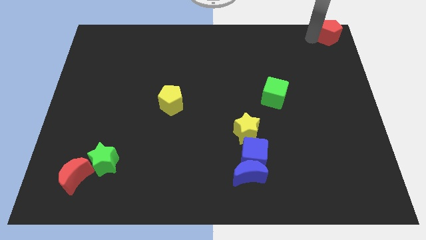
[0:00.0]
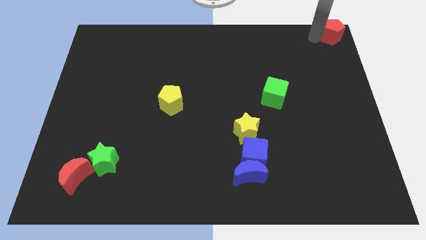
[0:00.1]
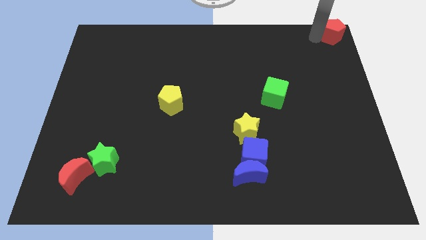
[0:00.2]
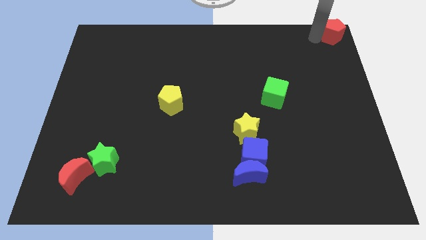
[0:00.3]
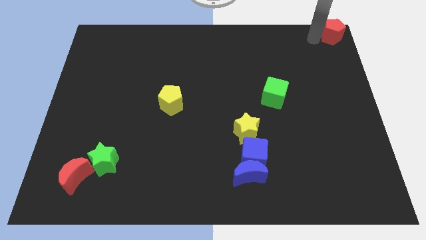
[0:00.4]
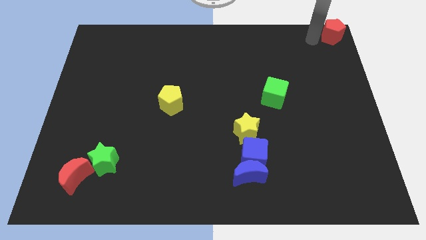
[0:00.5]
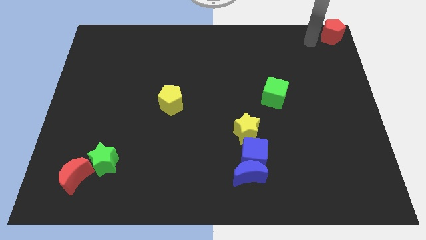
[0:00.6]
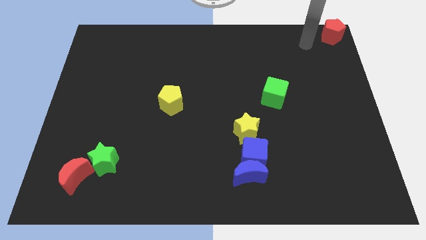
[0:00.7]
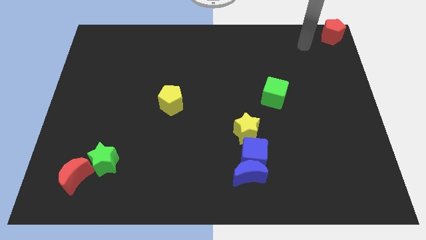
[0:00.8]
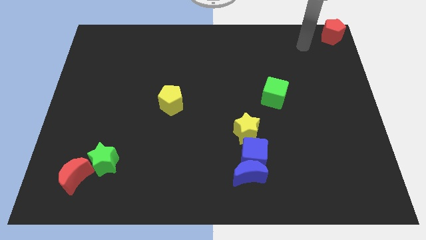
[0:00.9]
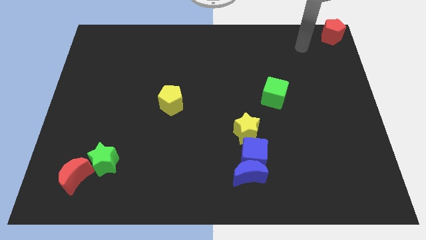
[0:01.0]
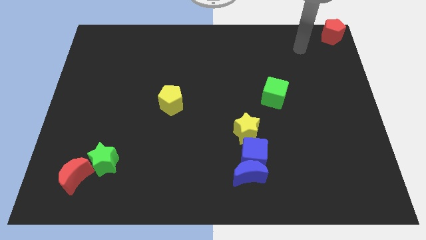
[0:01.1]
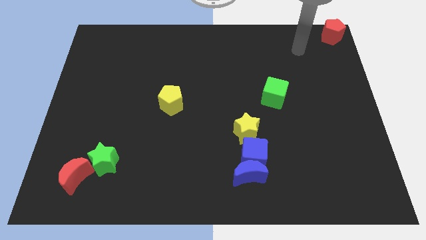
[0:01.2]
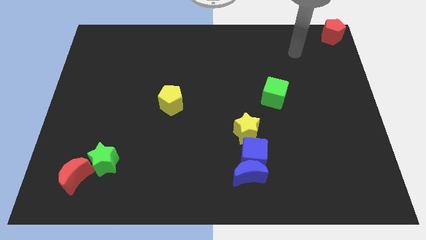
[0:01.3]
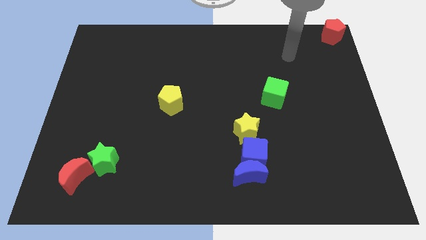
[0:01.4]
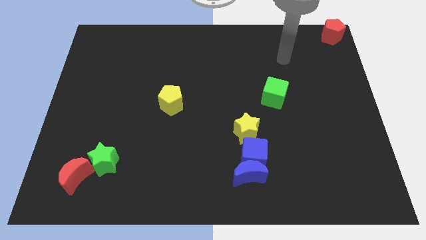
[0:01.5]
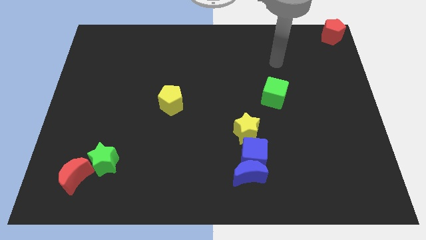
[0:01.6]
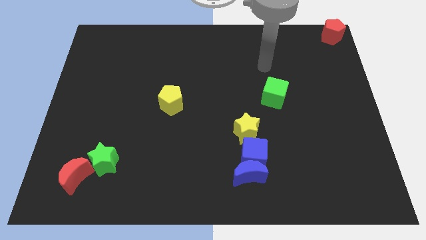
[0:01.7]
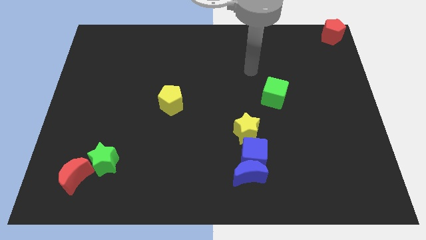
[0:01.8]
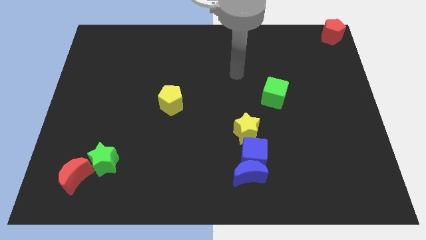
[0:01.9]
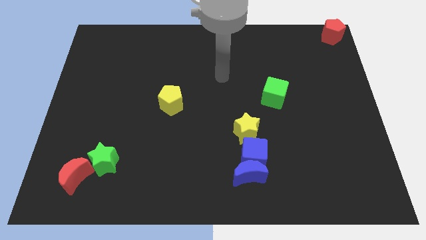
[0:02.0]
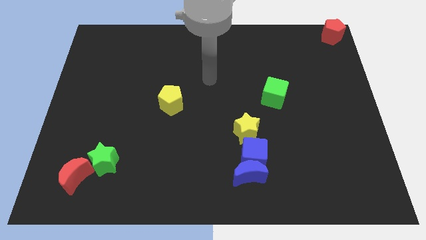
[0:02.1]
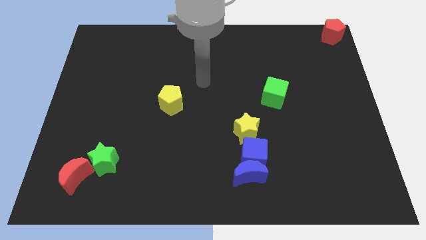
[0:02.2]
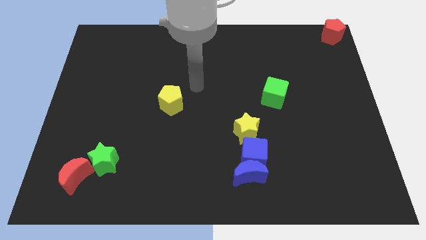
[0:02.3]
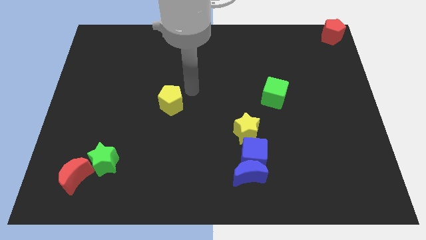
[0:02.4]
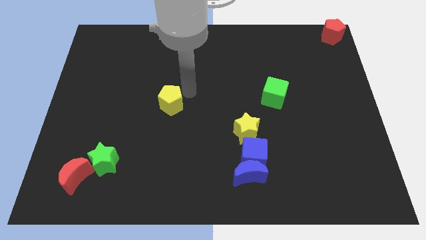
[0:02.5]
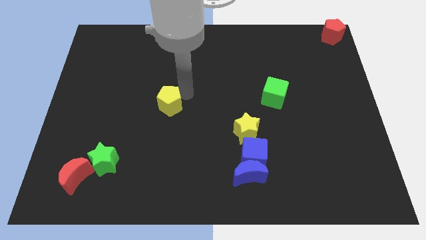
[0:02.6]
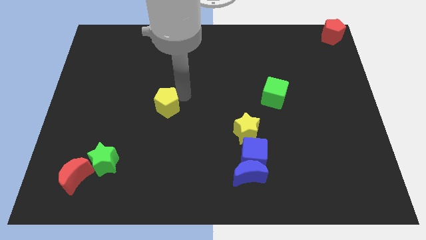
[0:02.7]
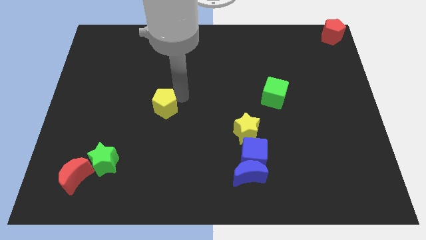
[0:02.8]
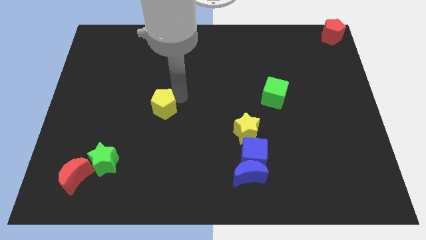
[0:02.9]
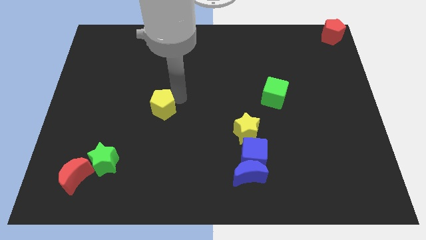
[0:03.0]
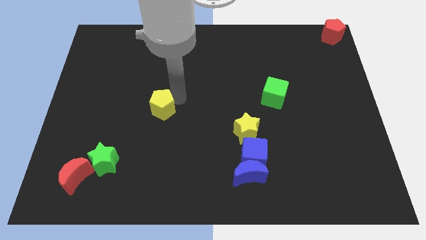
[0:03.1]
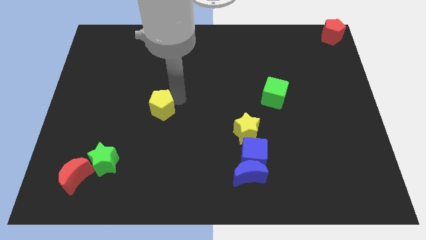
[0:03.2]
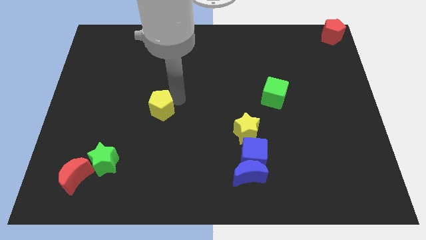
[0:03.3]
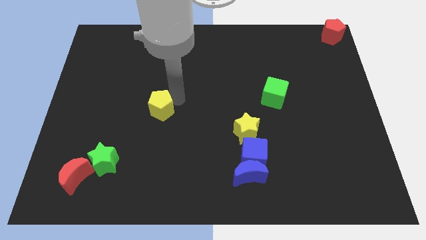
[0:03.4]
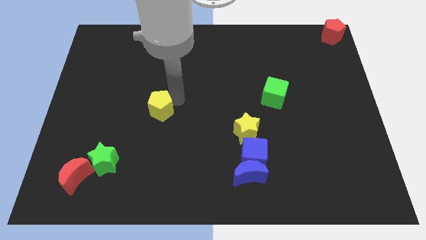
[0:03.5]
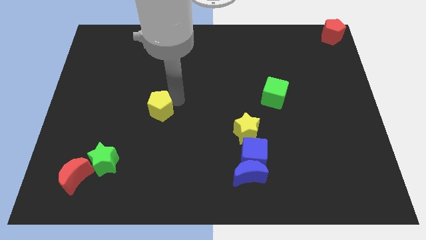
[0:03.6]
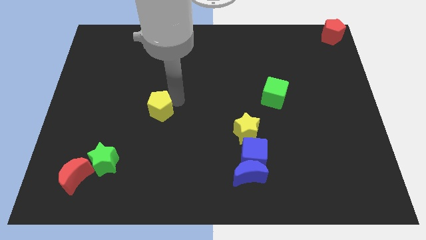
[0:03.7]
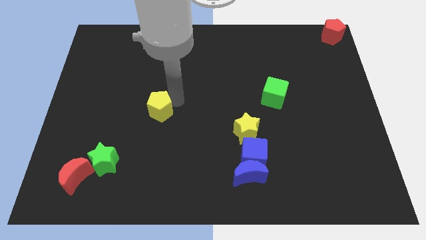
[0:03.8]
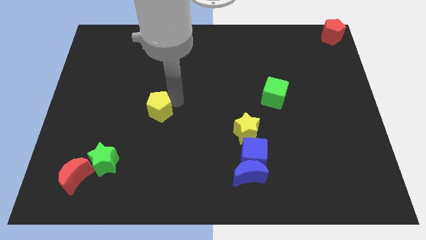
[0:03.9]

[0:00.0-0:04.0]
place the arm diagonal top right to the yellow pentagon

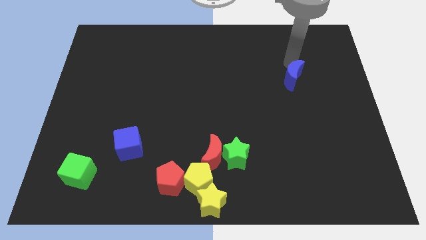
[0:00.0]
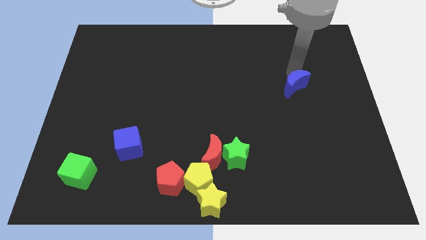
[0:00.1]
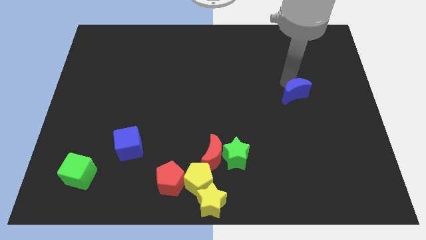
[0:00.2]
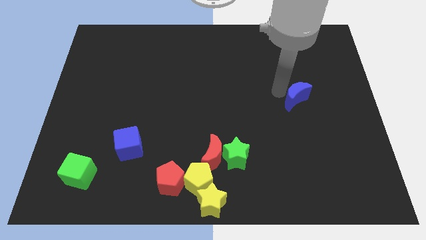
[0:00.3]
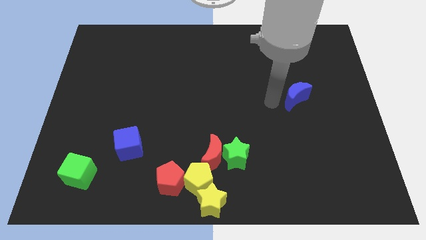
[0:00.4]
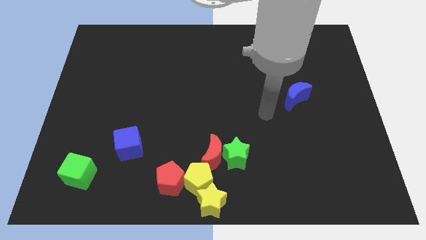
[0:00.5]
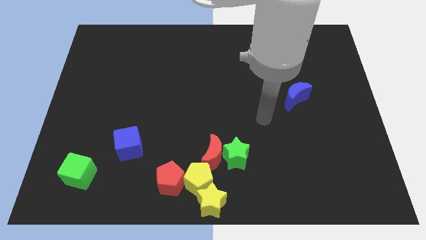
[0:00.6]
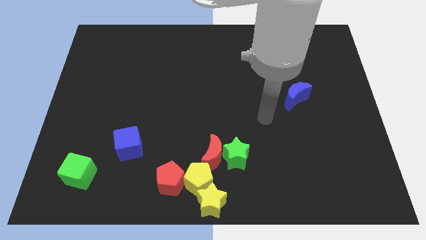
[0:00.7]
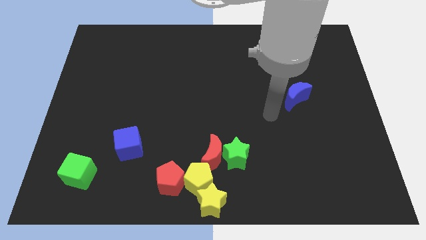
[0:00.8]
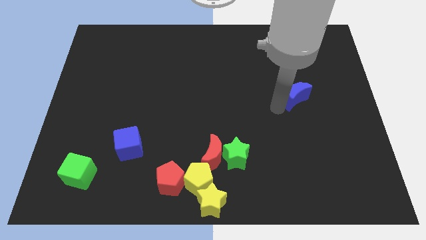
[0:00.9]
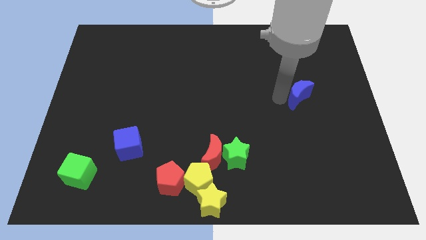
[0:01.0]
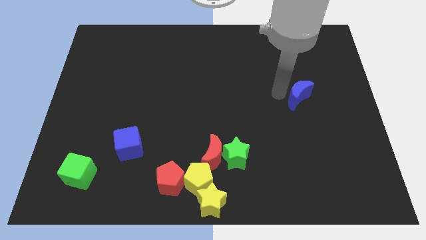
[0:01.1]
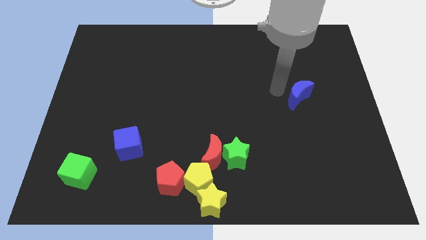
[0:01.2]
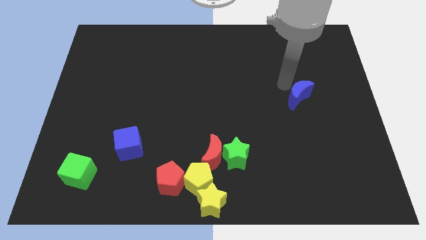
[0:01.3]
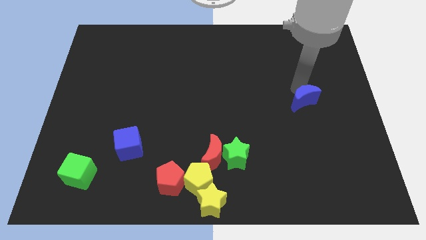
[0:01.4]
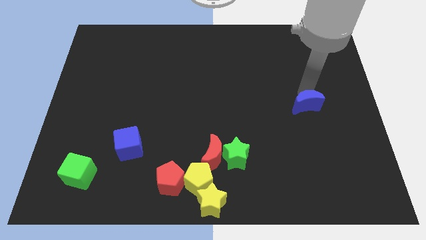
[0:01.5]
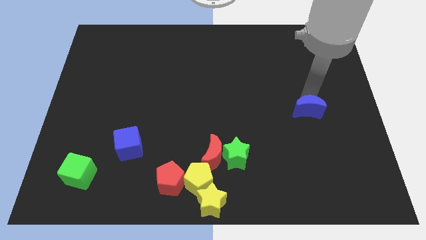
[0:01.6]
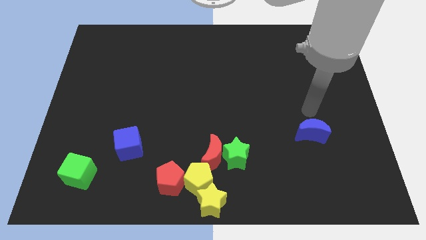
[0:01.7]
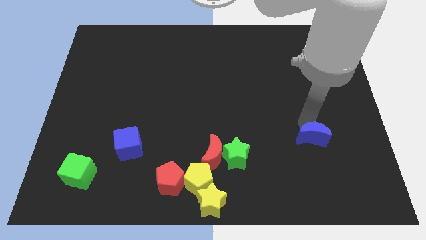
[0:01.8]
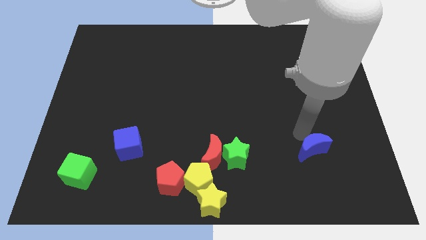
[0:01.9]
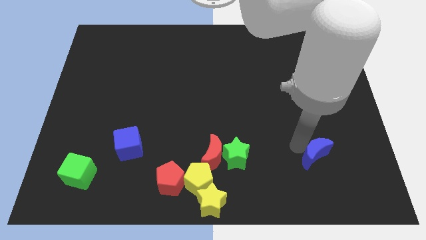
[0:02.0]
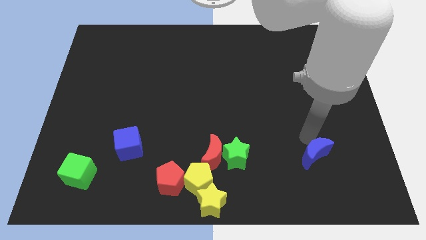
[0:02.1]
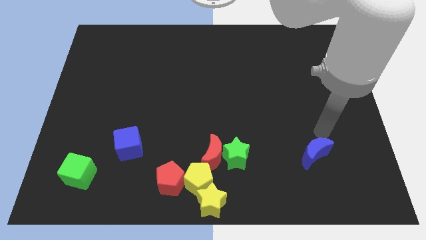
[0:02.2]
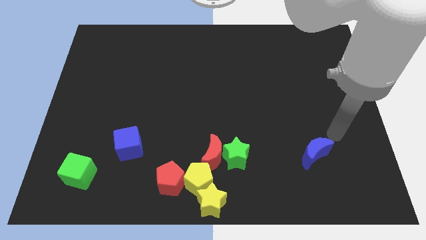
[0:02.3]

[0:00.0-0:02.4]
place blue moon right to green star

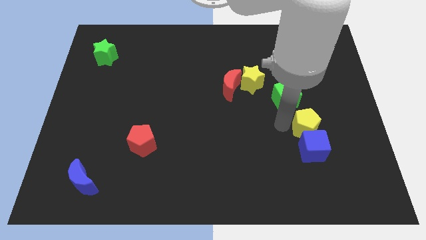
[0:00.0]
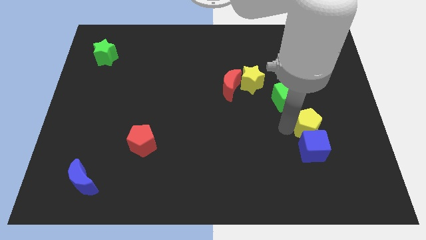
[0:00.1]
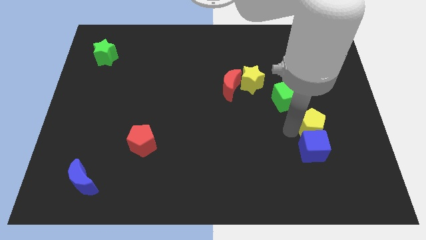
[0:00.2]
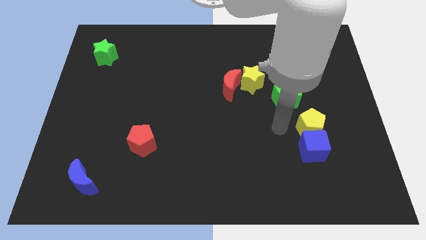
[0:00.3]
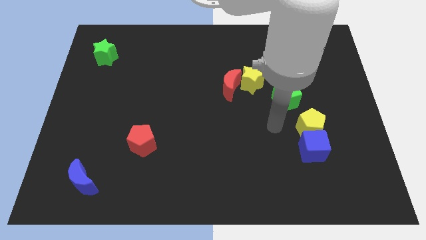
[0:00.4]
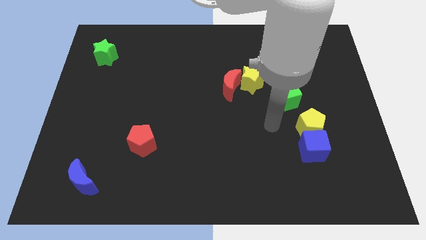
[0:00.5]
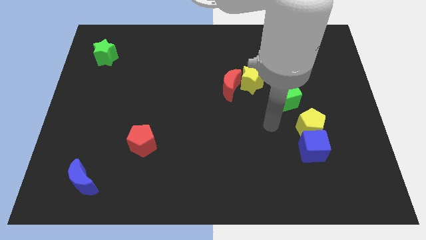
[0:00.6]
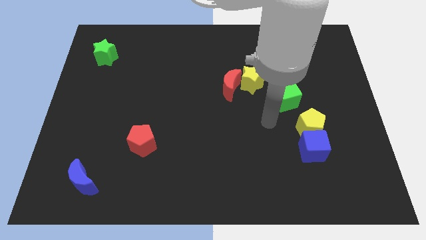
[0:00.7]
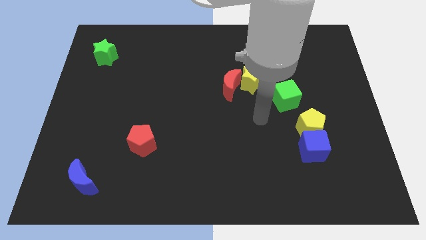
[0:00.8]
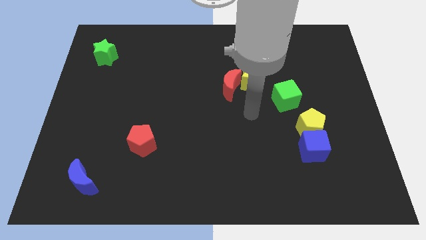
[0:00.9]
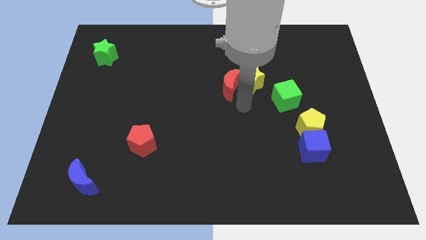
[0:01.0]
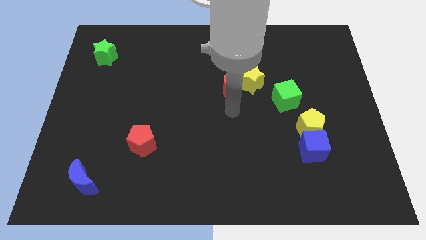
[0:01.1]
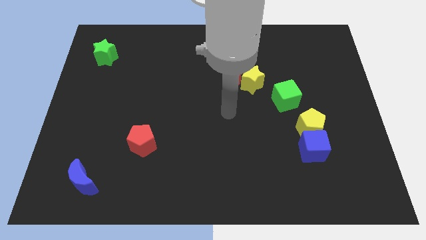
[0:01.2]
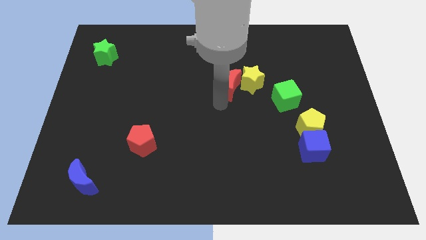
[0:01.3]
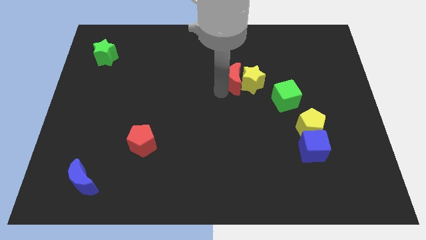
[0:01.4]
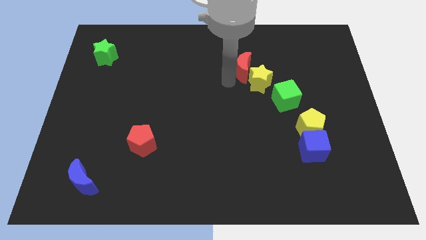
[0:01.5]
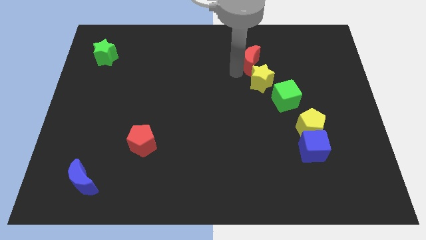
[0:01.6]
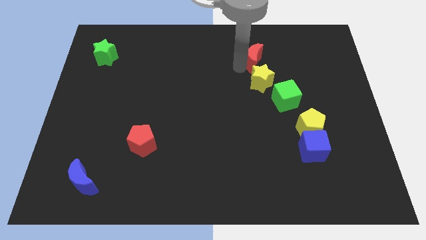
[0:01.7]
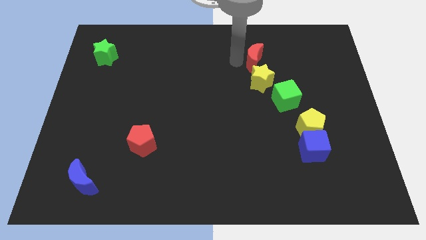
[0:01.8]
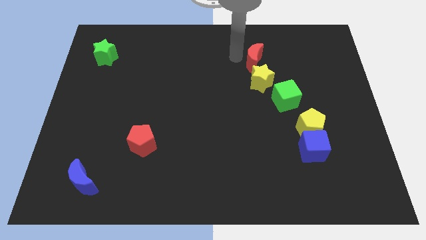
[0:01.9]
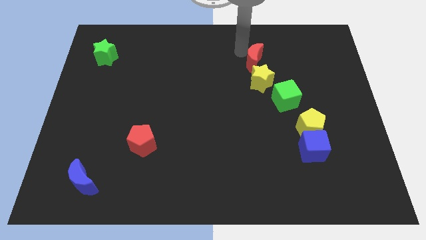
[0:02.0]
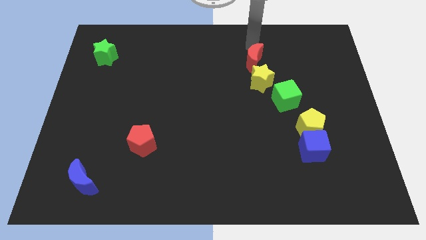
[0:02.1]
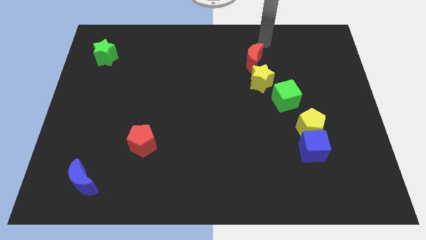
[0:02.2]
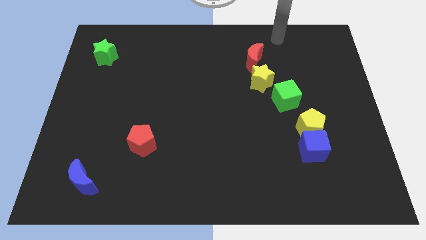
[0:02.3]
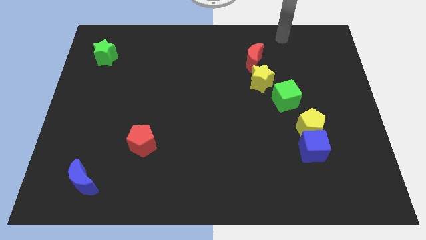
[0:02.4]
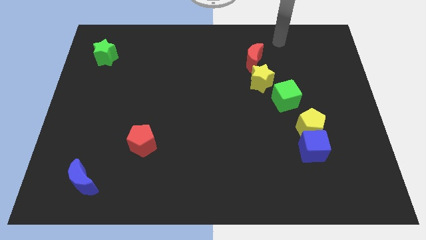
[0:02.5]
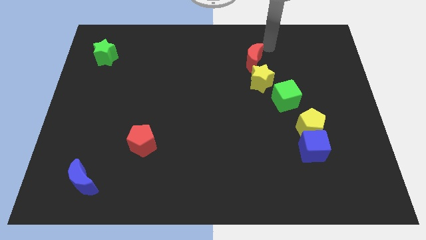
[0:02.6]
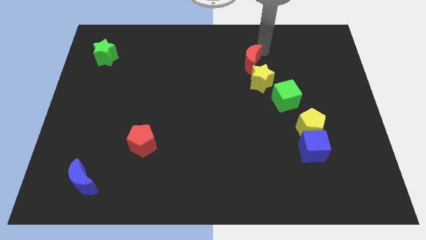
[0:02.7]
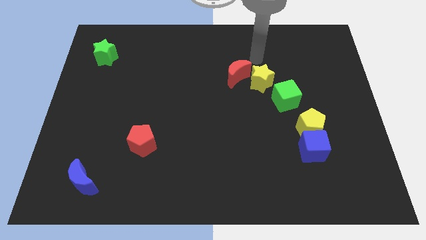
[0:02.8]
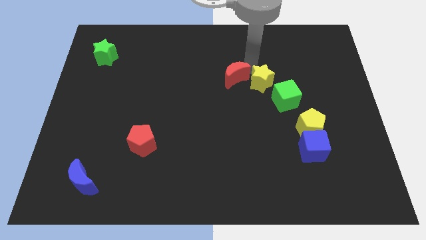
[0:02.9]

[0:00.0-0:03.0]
slide the red moon diagonally top right to red pentagon
